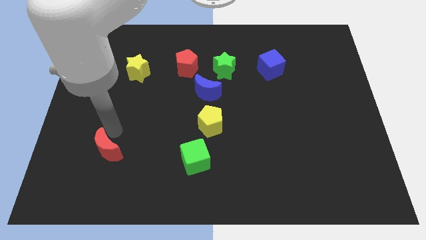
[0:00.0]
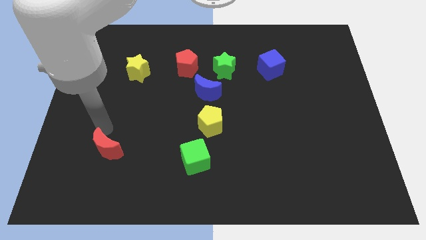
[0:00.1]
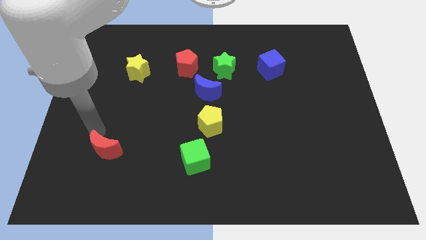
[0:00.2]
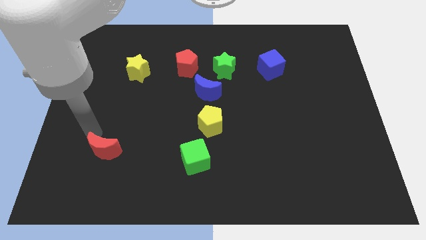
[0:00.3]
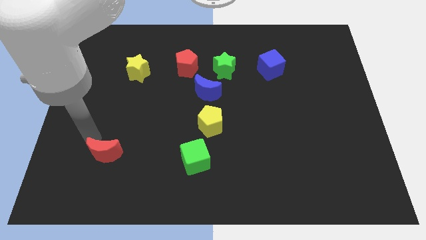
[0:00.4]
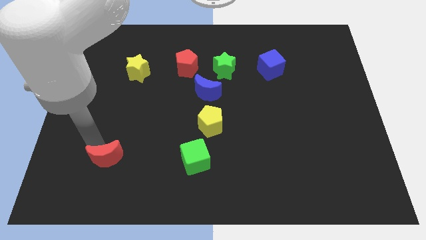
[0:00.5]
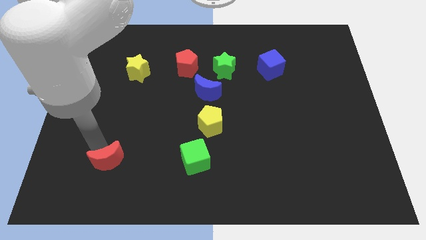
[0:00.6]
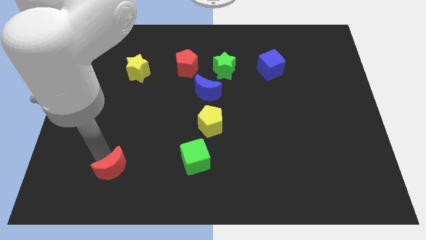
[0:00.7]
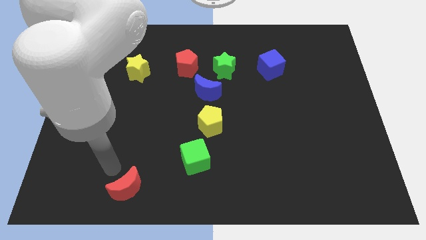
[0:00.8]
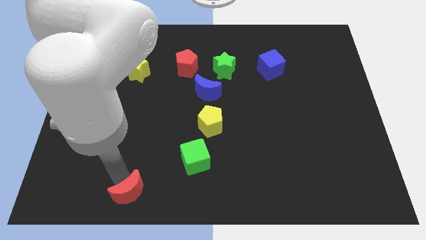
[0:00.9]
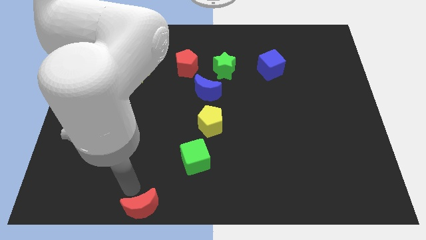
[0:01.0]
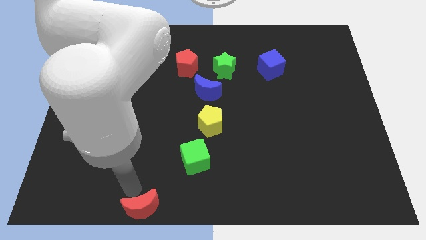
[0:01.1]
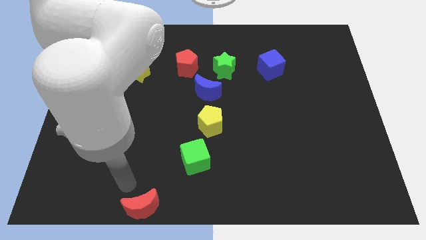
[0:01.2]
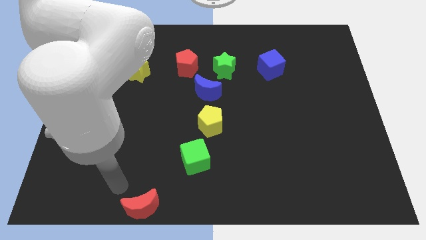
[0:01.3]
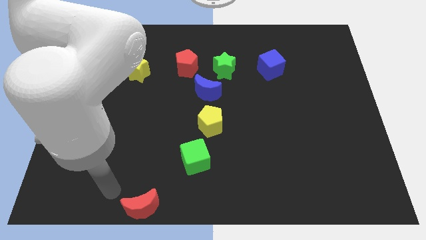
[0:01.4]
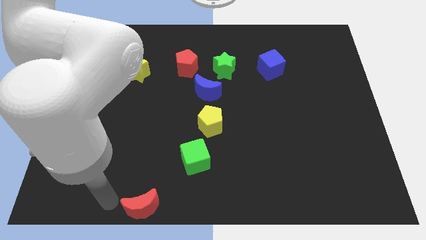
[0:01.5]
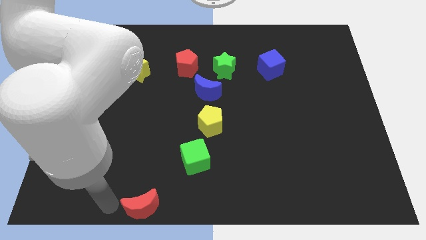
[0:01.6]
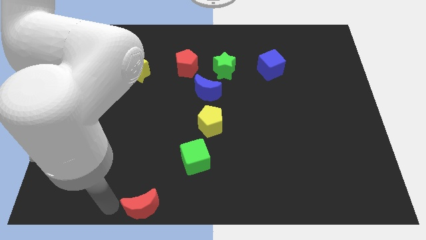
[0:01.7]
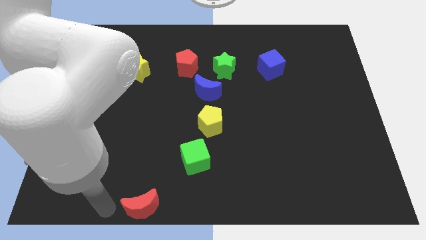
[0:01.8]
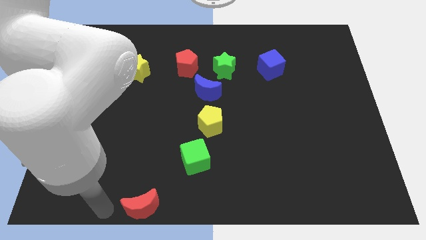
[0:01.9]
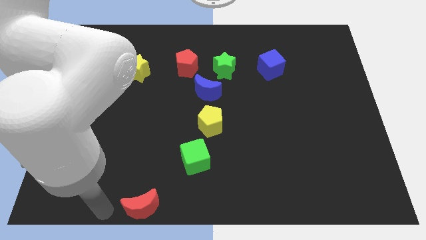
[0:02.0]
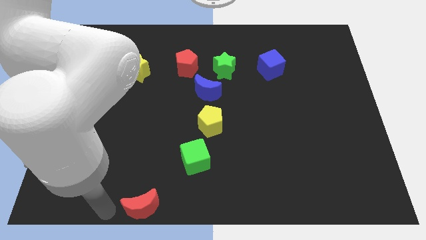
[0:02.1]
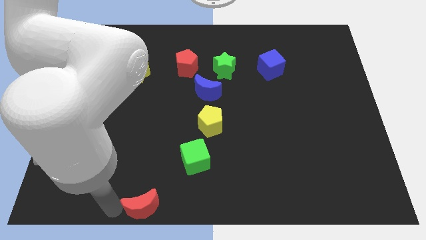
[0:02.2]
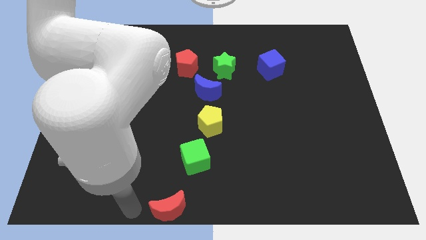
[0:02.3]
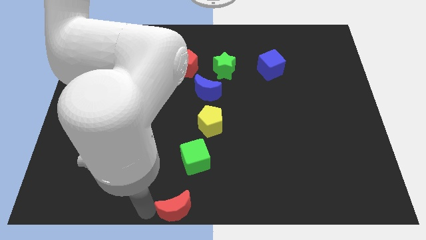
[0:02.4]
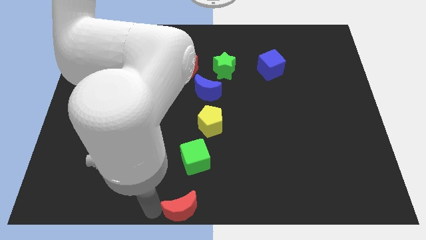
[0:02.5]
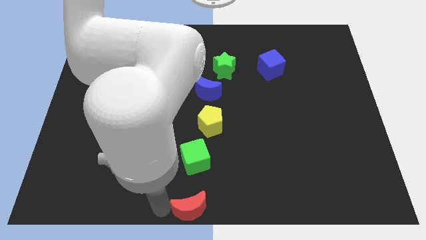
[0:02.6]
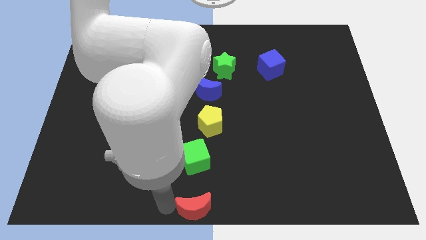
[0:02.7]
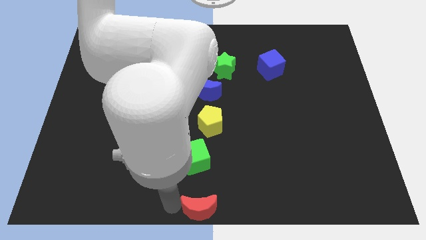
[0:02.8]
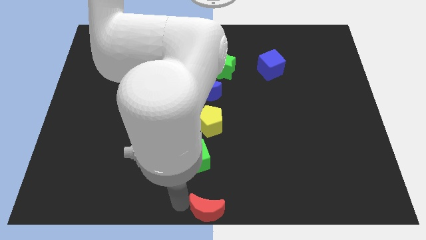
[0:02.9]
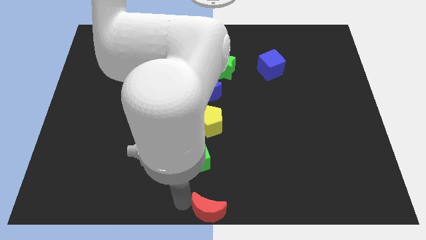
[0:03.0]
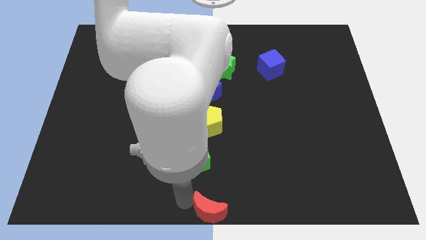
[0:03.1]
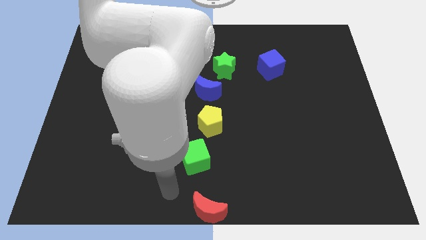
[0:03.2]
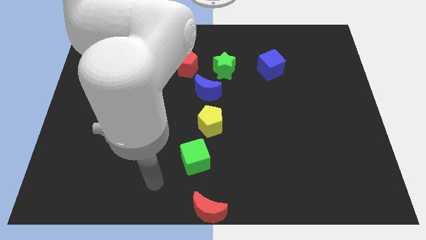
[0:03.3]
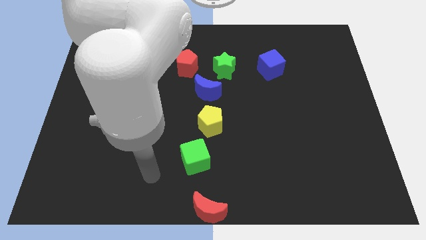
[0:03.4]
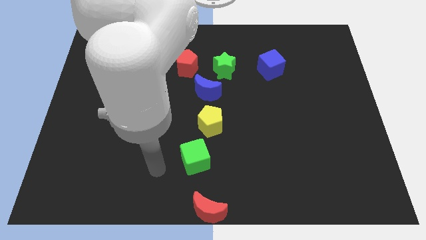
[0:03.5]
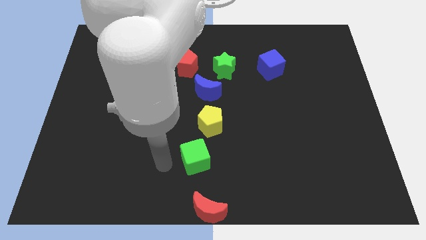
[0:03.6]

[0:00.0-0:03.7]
place the red crescent at the bottom center of the board

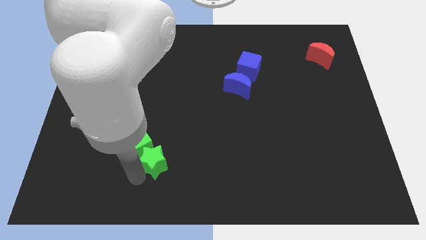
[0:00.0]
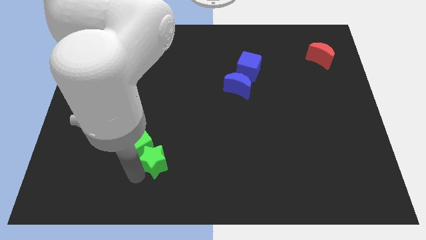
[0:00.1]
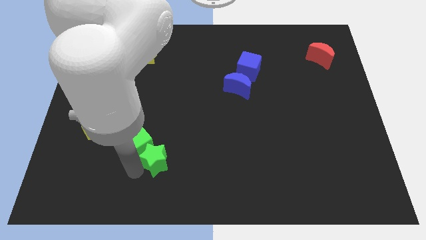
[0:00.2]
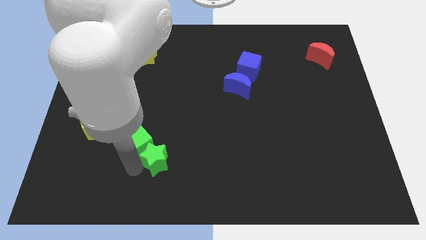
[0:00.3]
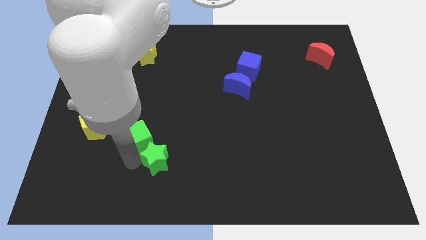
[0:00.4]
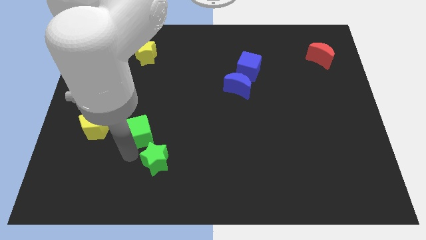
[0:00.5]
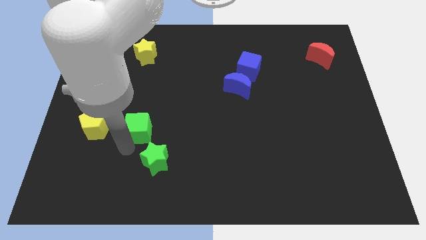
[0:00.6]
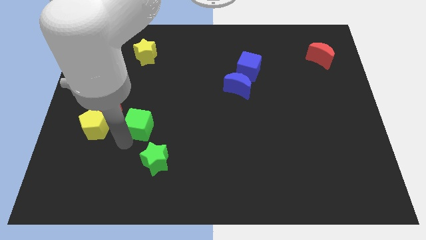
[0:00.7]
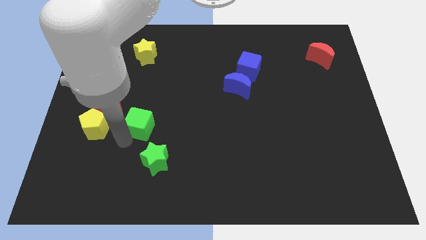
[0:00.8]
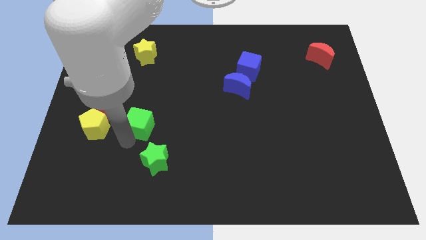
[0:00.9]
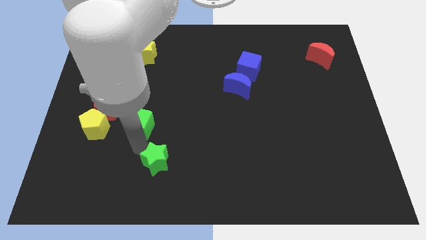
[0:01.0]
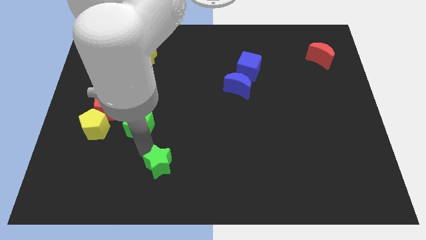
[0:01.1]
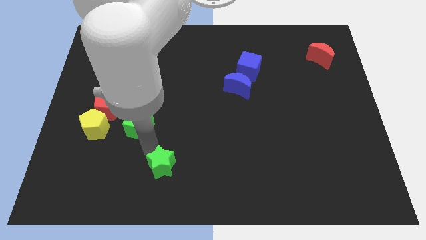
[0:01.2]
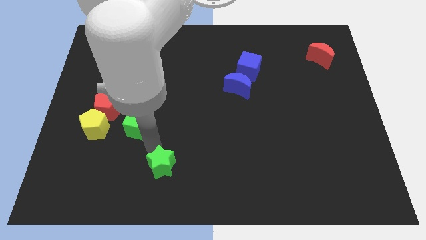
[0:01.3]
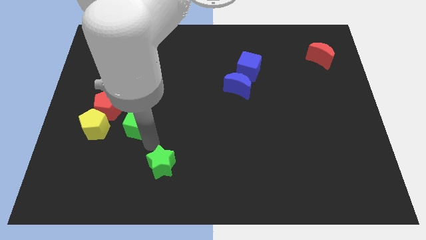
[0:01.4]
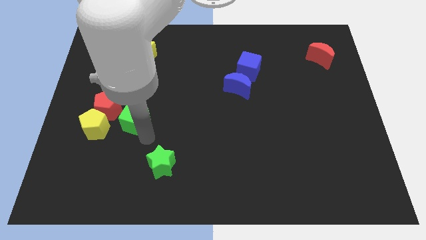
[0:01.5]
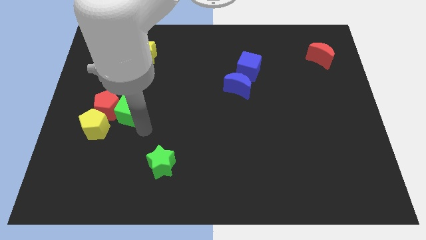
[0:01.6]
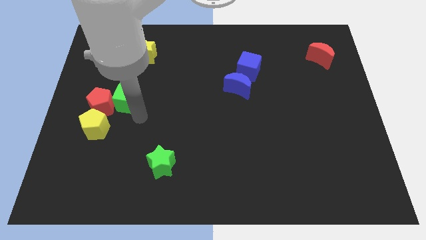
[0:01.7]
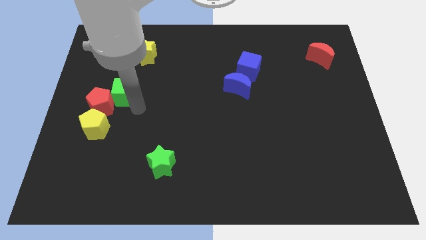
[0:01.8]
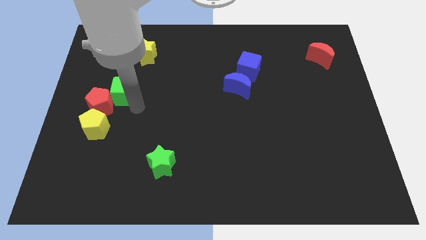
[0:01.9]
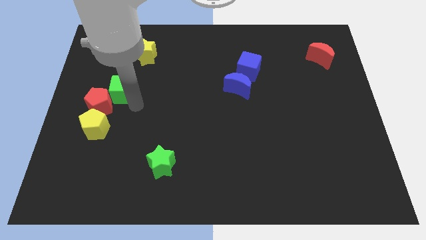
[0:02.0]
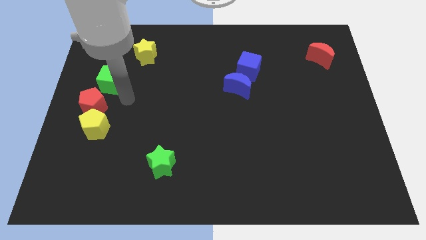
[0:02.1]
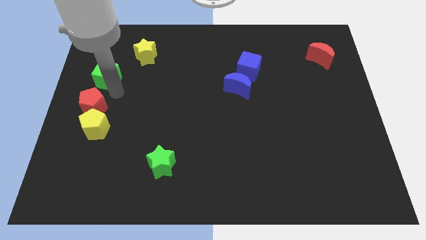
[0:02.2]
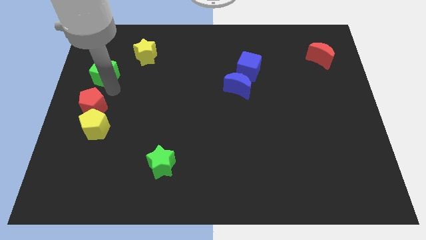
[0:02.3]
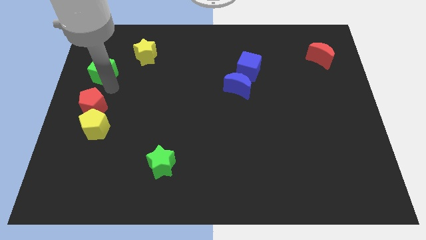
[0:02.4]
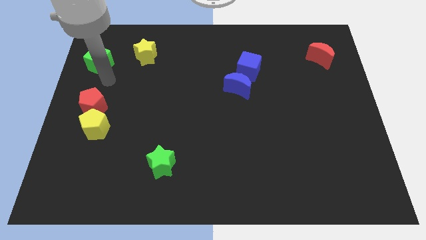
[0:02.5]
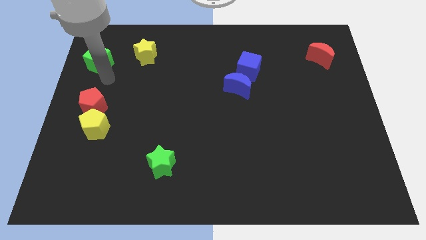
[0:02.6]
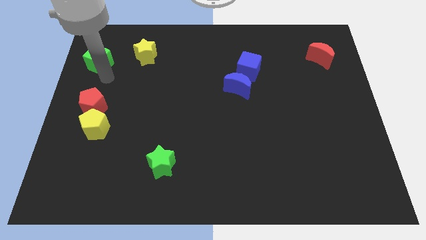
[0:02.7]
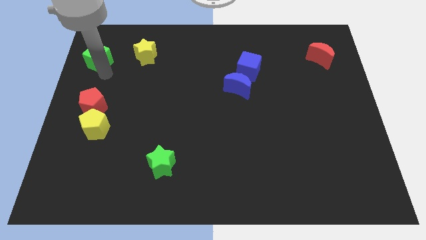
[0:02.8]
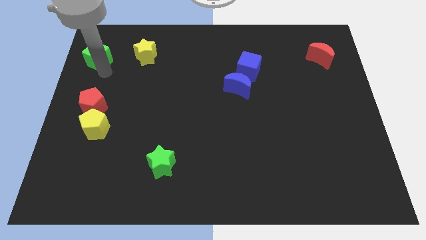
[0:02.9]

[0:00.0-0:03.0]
push the green cube to the left of the yellow star

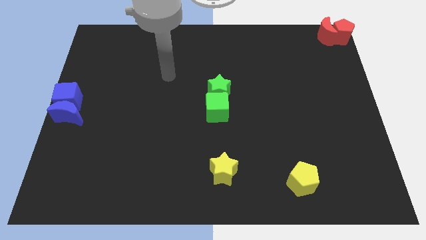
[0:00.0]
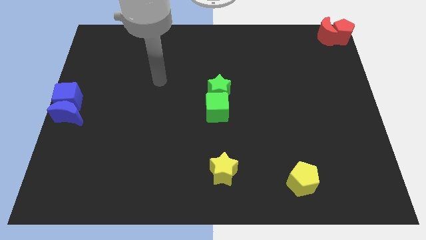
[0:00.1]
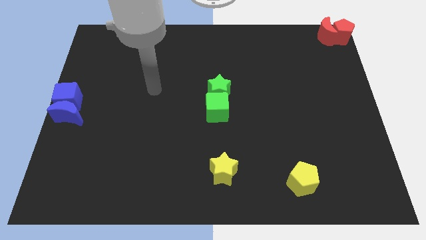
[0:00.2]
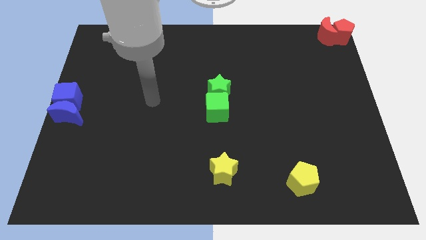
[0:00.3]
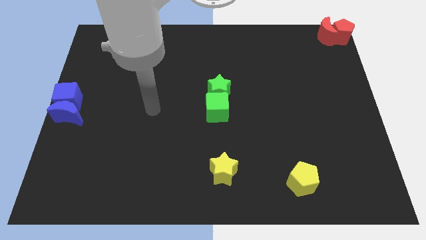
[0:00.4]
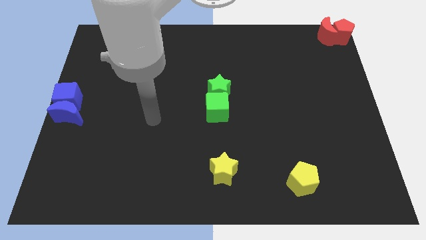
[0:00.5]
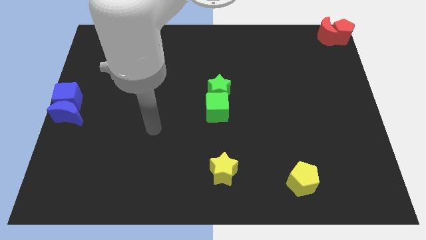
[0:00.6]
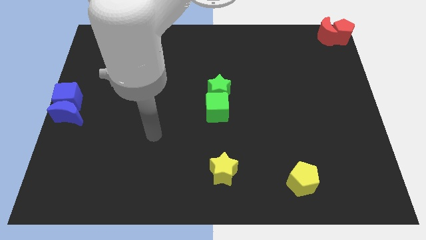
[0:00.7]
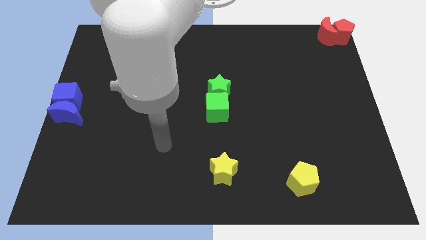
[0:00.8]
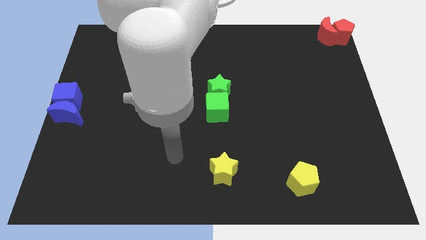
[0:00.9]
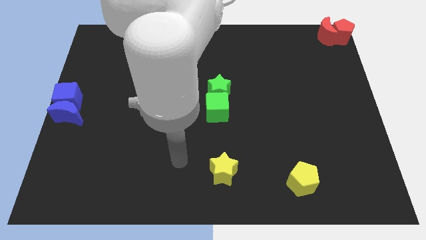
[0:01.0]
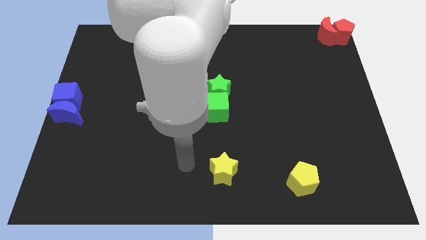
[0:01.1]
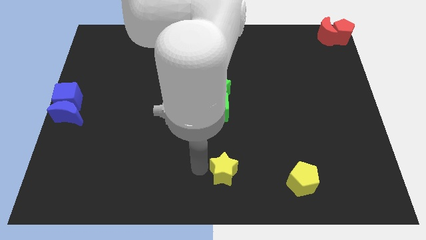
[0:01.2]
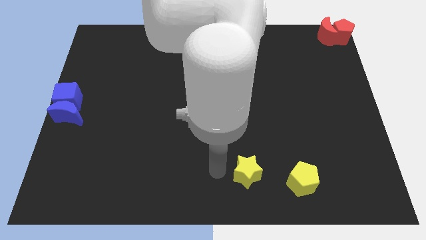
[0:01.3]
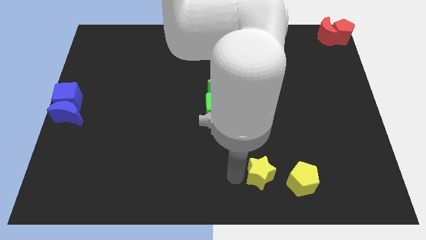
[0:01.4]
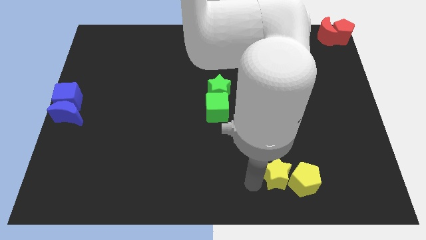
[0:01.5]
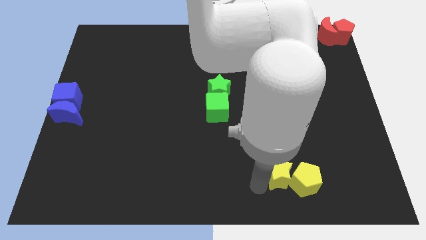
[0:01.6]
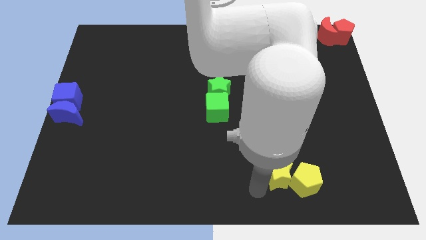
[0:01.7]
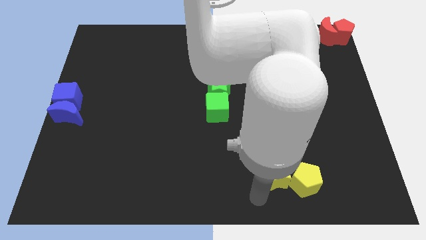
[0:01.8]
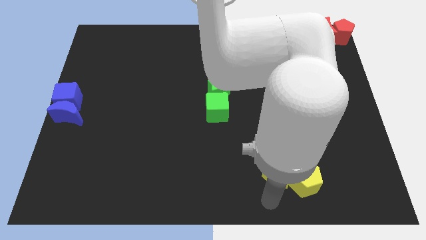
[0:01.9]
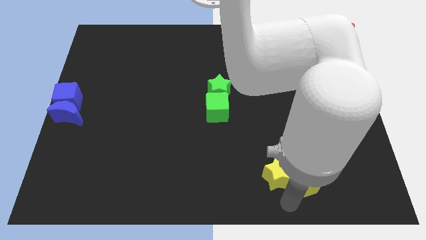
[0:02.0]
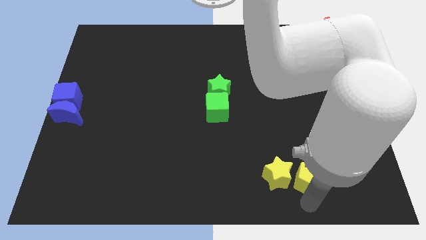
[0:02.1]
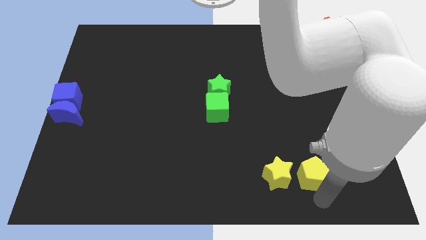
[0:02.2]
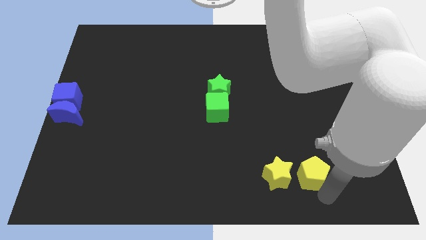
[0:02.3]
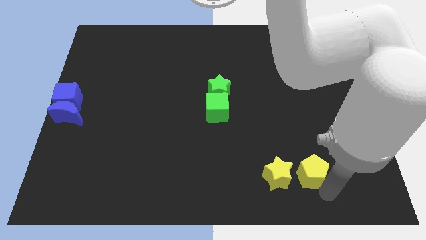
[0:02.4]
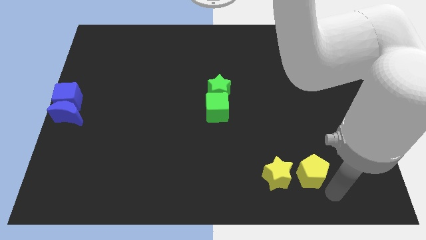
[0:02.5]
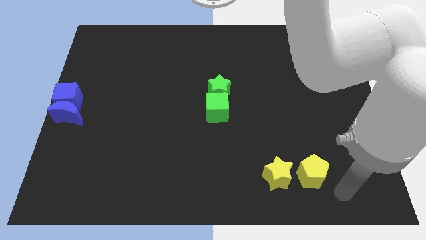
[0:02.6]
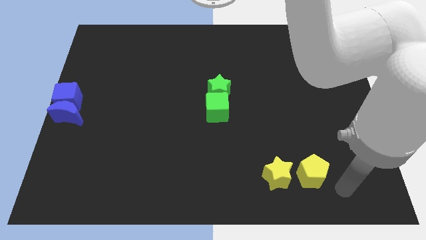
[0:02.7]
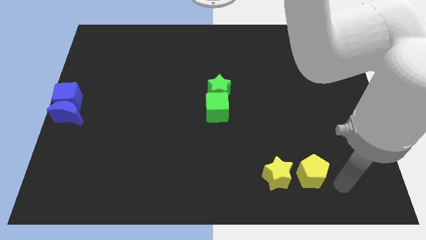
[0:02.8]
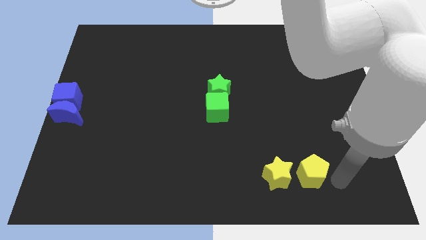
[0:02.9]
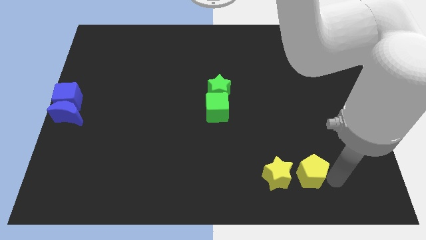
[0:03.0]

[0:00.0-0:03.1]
move the yellow star to the left of the yellow pentagon
